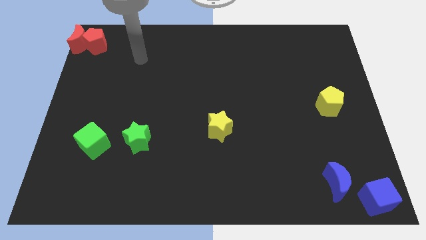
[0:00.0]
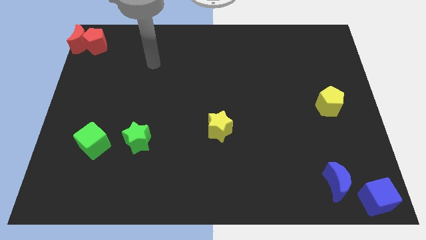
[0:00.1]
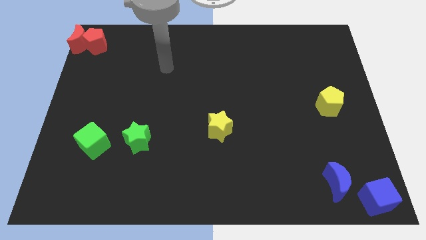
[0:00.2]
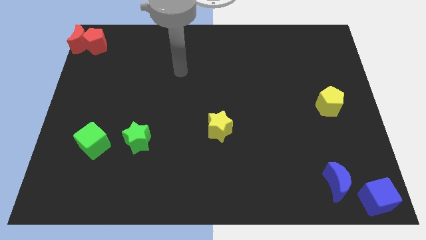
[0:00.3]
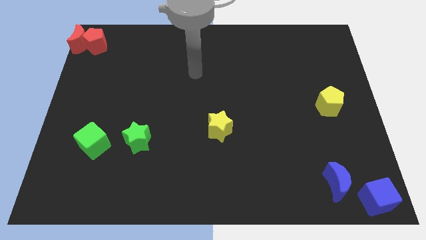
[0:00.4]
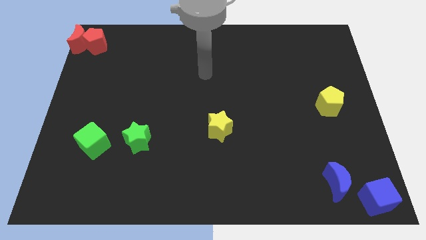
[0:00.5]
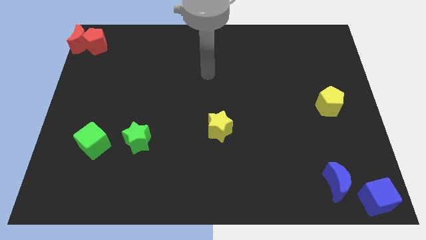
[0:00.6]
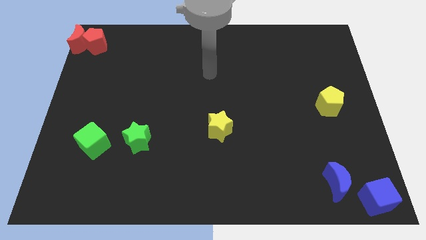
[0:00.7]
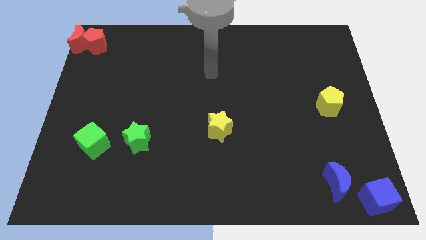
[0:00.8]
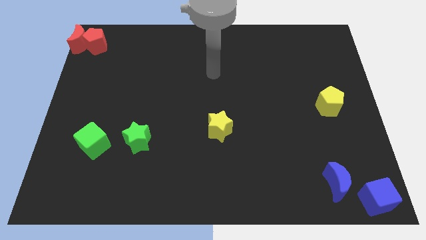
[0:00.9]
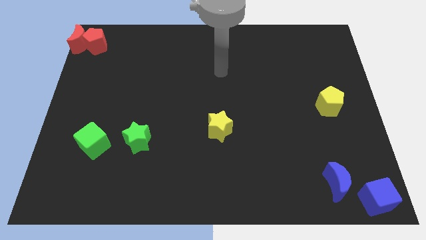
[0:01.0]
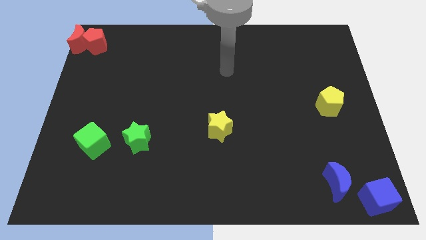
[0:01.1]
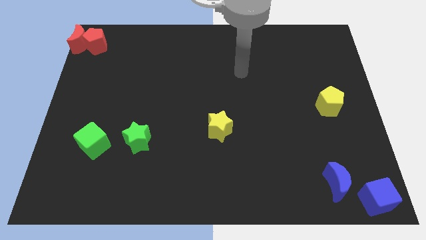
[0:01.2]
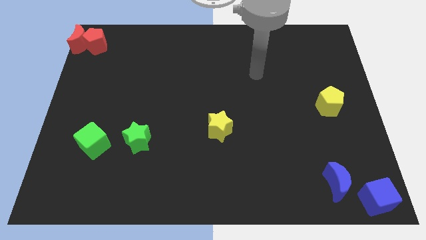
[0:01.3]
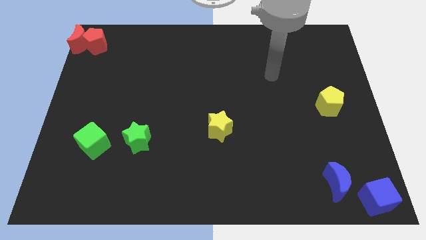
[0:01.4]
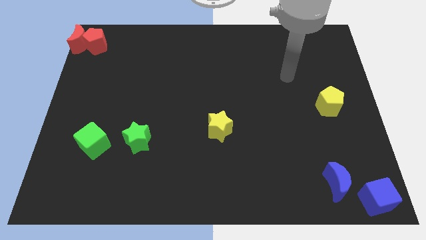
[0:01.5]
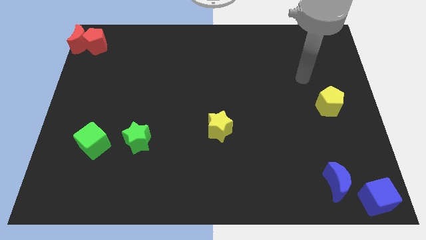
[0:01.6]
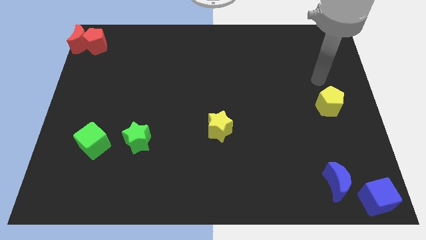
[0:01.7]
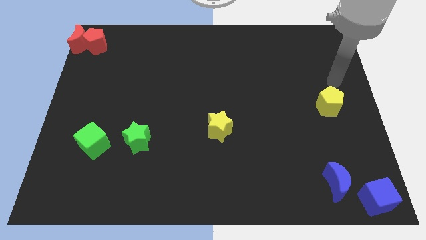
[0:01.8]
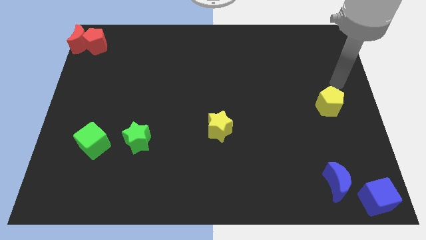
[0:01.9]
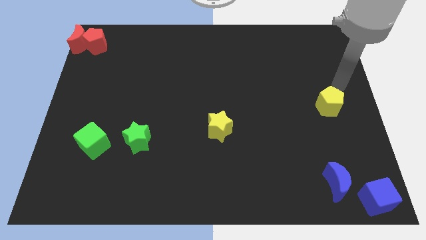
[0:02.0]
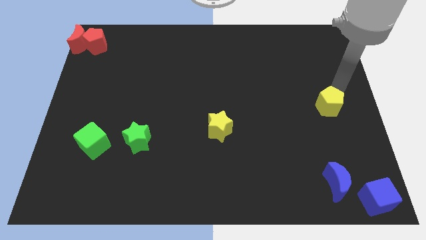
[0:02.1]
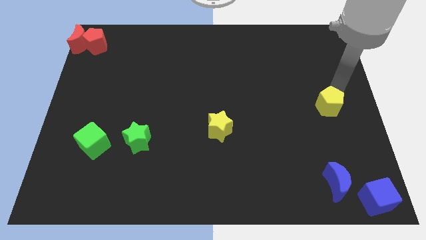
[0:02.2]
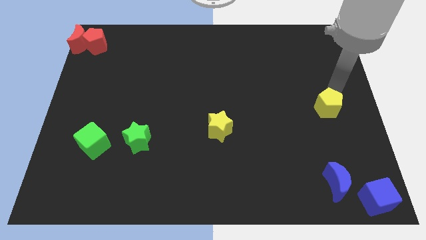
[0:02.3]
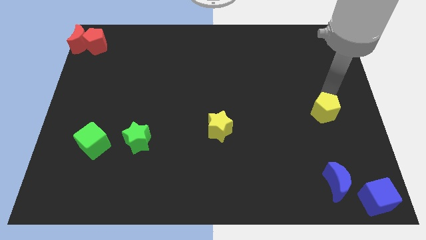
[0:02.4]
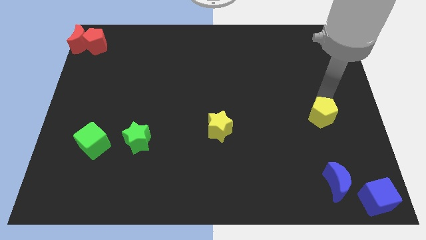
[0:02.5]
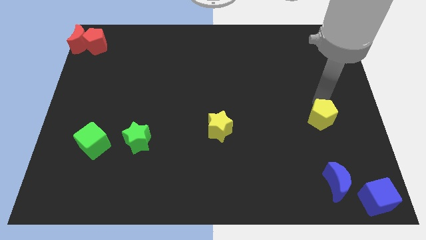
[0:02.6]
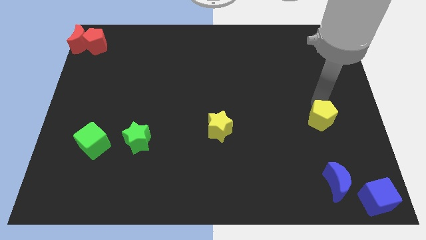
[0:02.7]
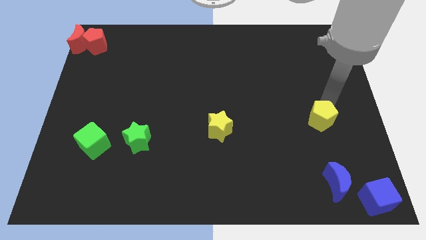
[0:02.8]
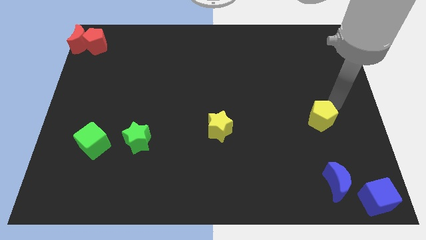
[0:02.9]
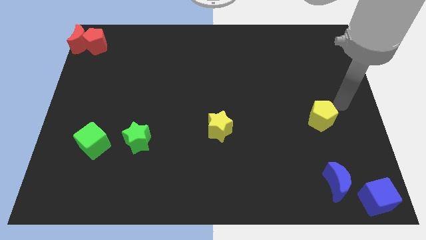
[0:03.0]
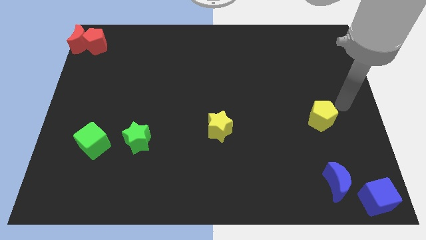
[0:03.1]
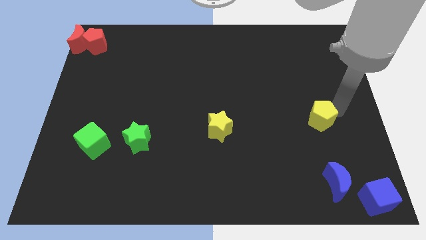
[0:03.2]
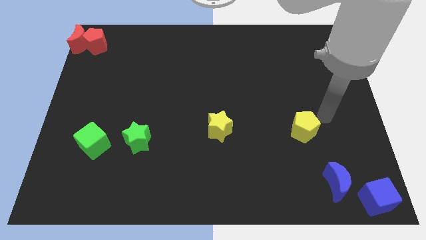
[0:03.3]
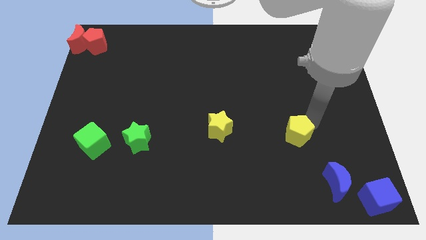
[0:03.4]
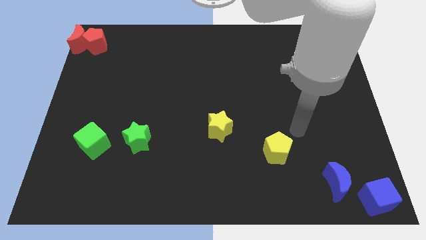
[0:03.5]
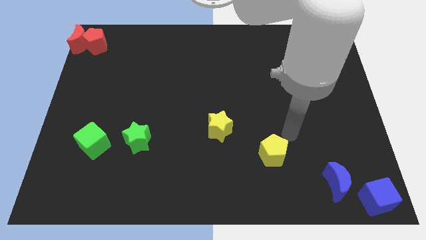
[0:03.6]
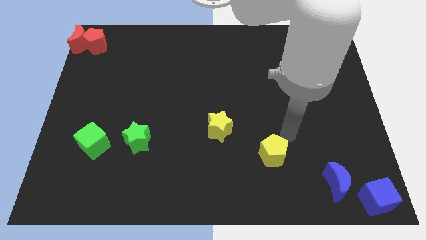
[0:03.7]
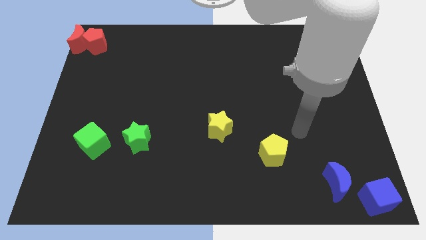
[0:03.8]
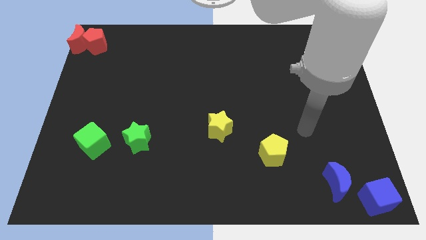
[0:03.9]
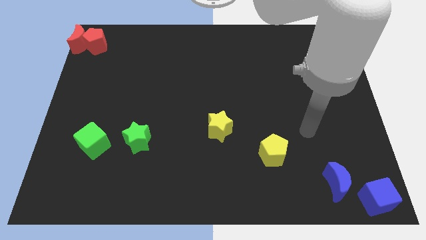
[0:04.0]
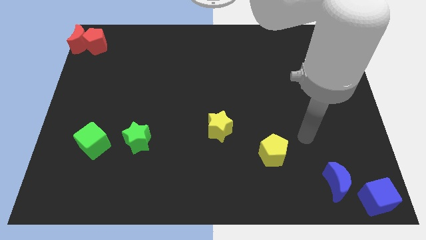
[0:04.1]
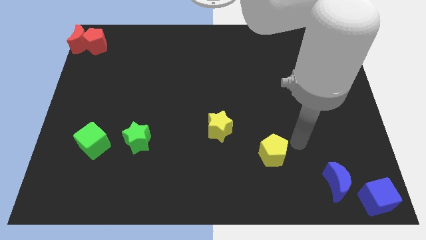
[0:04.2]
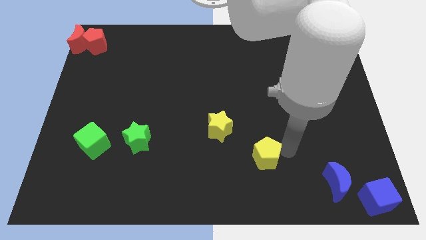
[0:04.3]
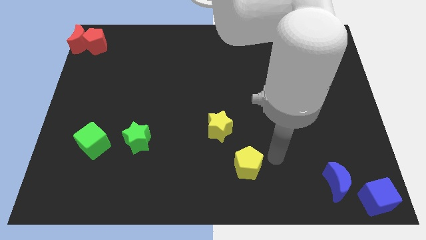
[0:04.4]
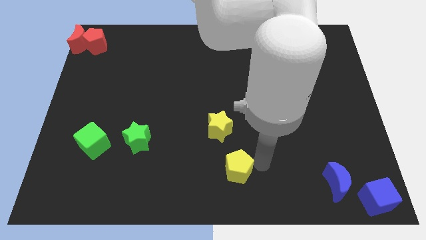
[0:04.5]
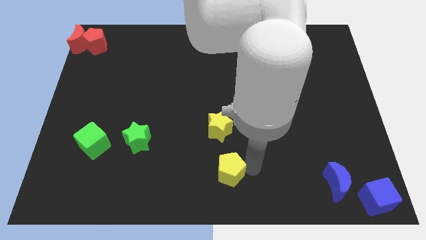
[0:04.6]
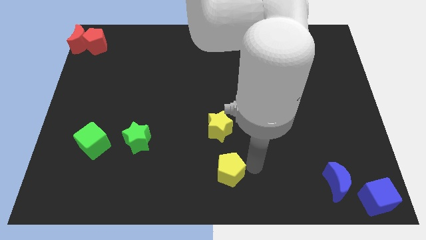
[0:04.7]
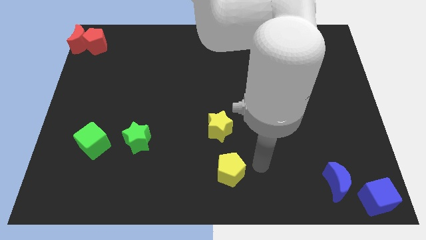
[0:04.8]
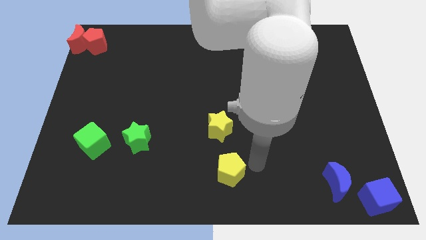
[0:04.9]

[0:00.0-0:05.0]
place the yellow pentagon vertically below the yellow star

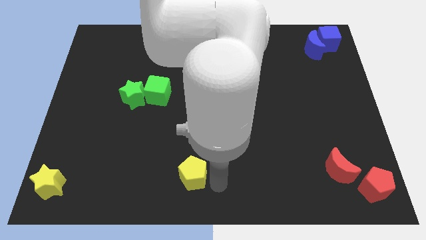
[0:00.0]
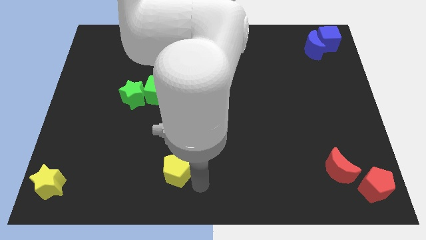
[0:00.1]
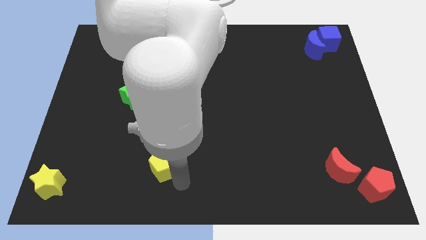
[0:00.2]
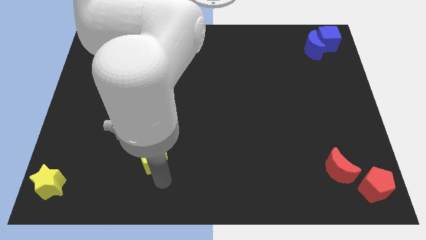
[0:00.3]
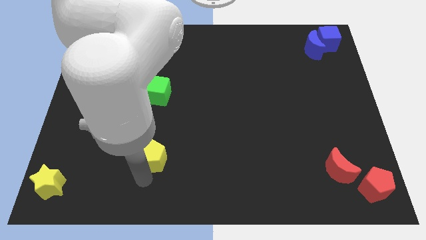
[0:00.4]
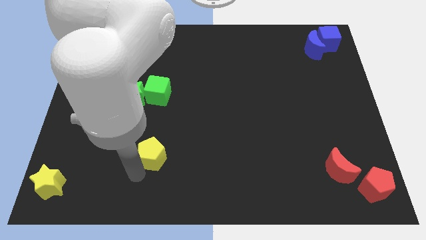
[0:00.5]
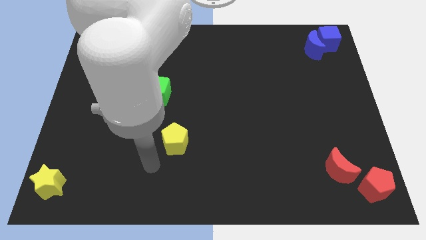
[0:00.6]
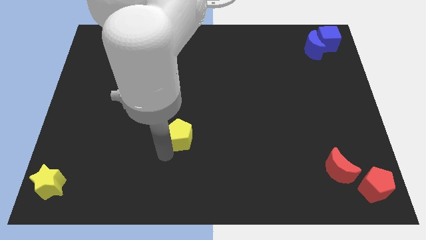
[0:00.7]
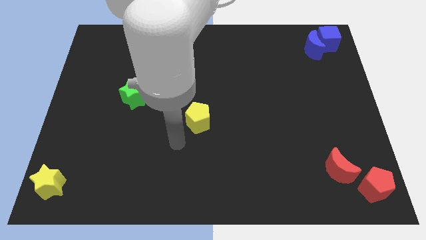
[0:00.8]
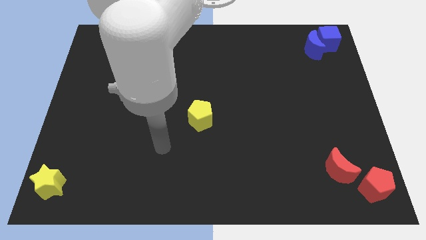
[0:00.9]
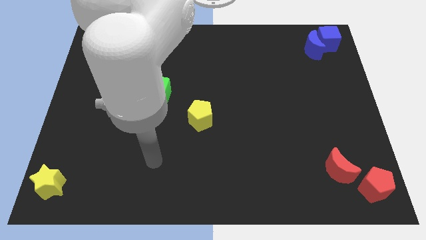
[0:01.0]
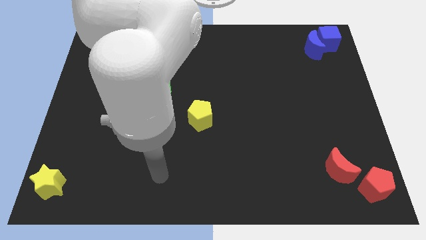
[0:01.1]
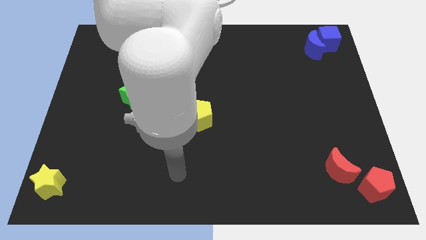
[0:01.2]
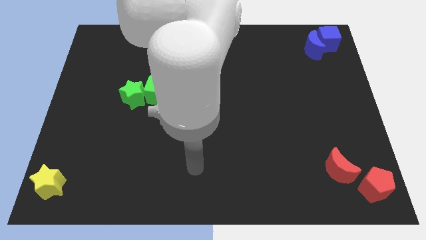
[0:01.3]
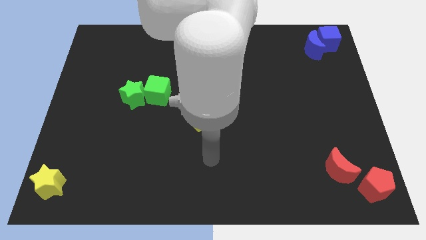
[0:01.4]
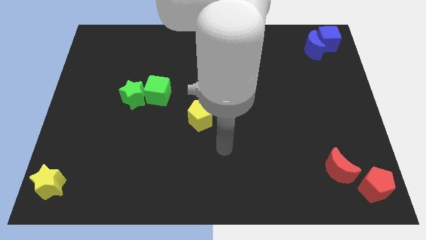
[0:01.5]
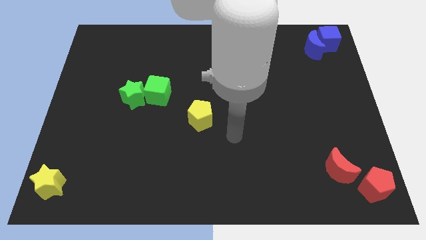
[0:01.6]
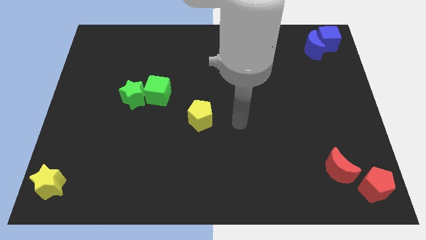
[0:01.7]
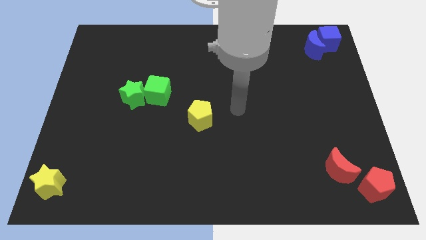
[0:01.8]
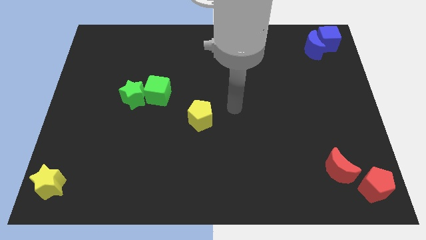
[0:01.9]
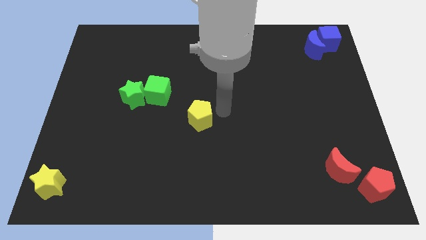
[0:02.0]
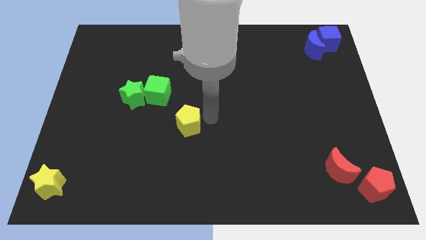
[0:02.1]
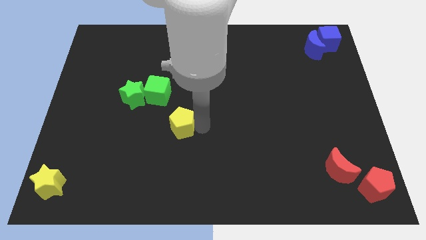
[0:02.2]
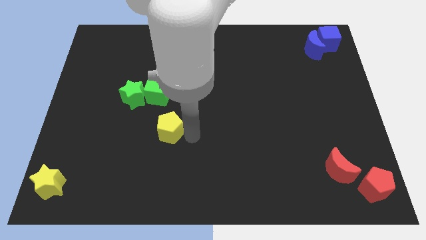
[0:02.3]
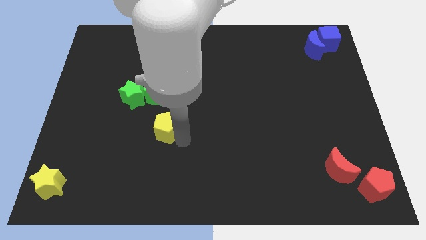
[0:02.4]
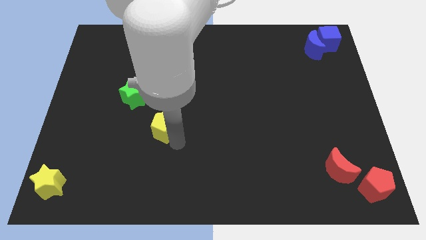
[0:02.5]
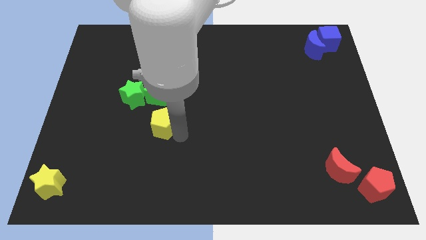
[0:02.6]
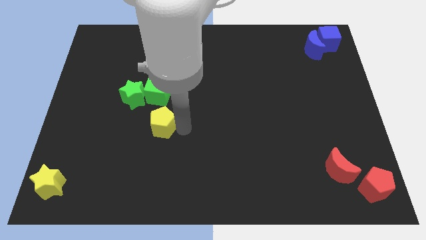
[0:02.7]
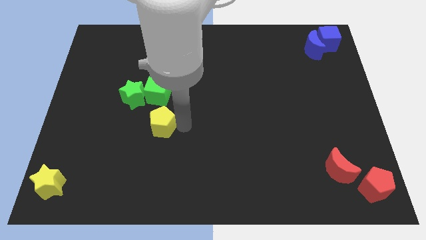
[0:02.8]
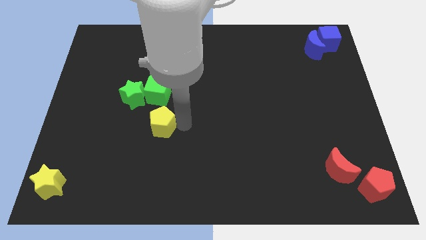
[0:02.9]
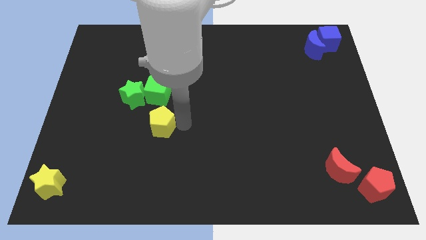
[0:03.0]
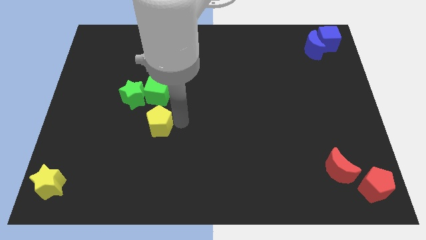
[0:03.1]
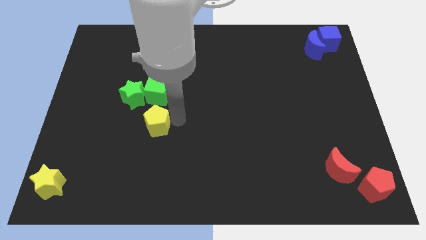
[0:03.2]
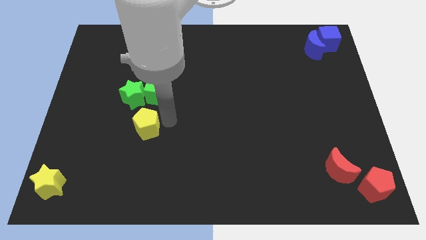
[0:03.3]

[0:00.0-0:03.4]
place the yellow pentagon below the green cube

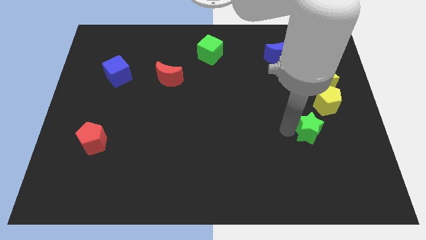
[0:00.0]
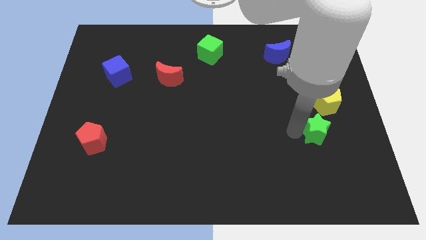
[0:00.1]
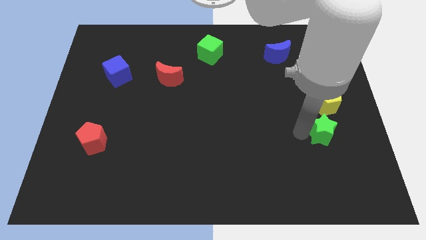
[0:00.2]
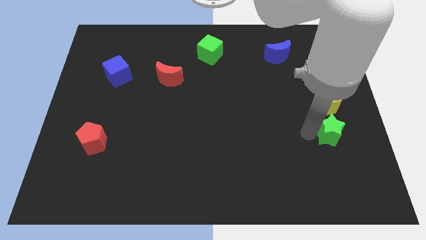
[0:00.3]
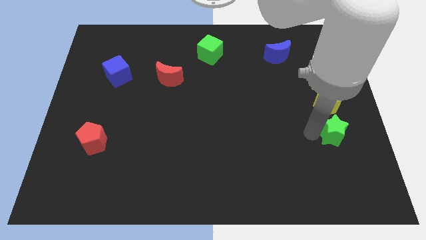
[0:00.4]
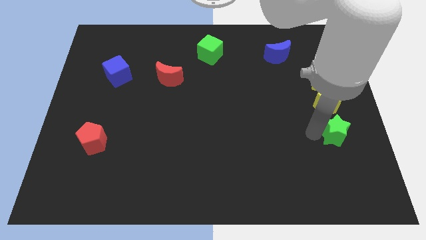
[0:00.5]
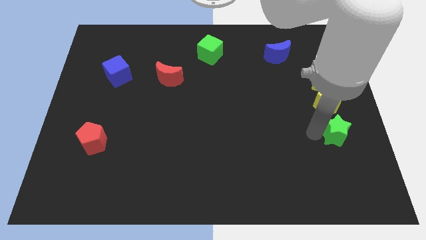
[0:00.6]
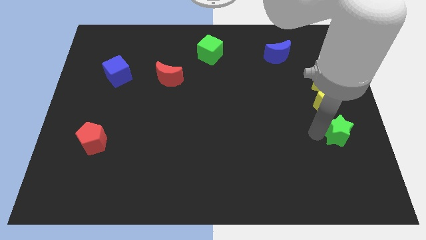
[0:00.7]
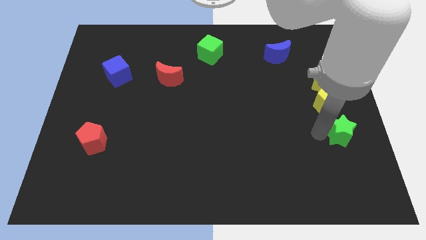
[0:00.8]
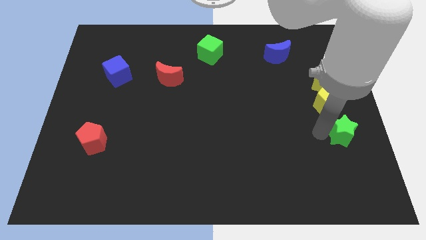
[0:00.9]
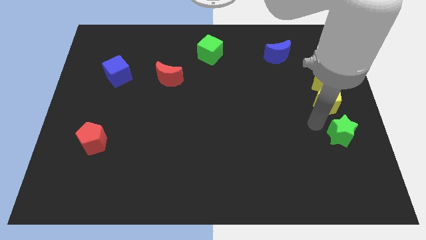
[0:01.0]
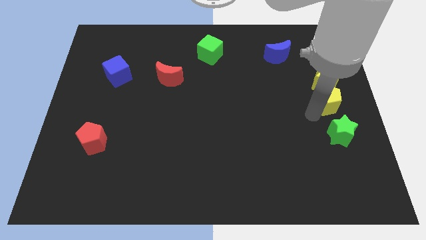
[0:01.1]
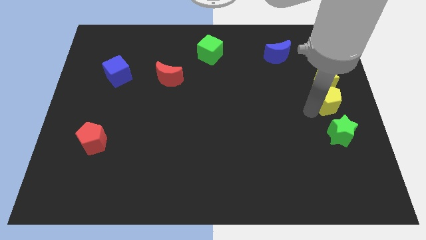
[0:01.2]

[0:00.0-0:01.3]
move the green star slightly to the right
